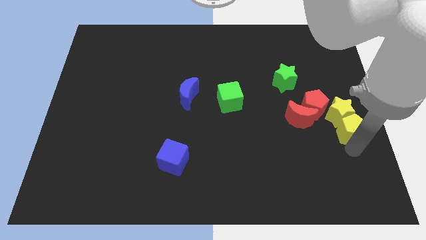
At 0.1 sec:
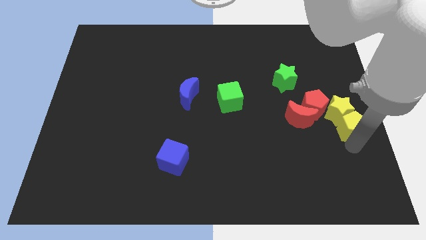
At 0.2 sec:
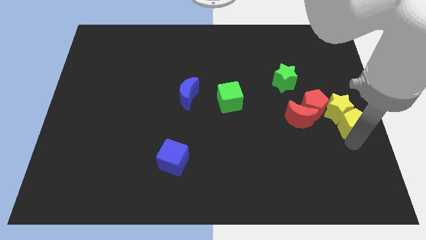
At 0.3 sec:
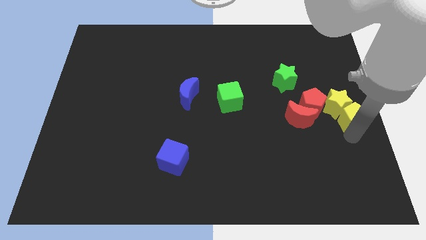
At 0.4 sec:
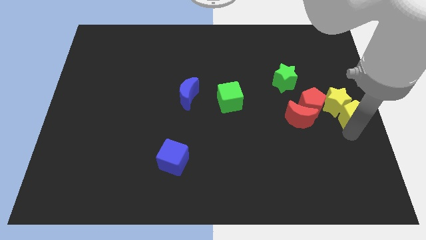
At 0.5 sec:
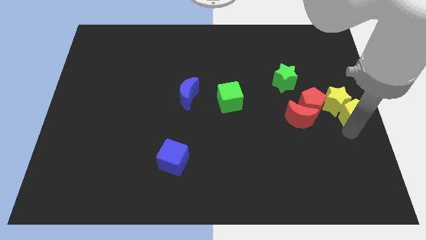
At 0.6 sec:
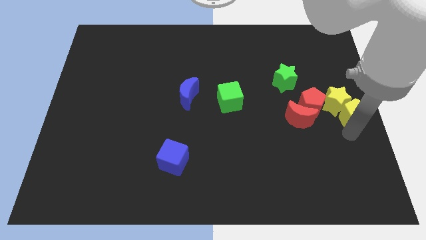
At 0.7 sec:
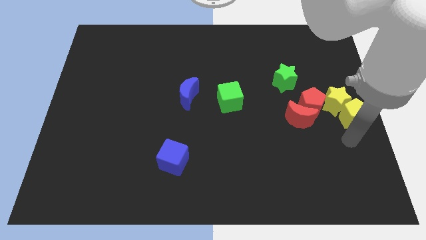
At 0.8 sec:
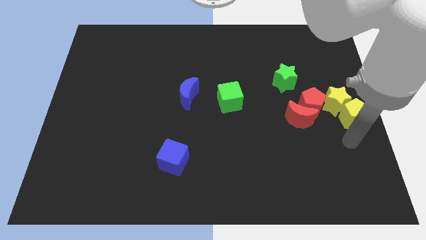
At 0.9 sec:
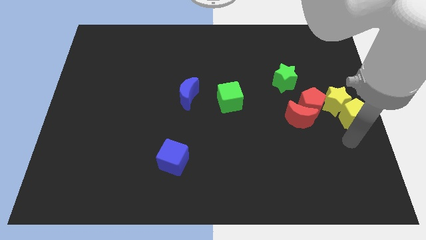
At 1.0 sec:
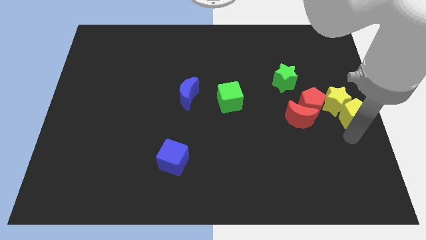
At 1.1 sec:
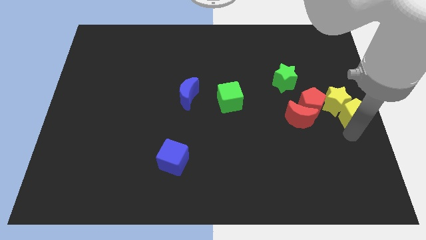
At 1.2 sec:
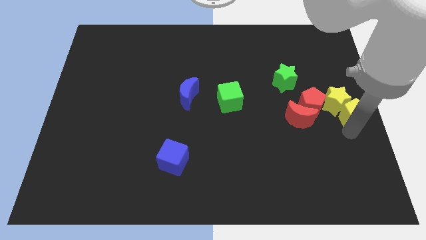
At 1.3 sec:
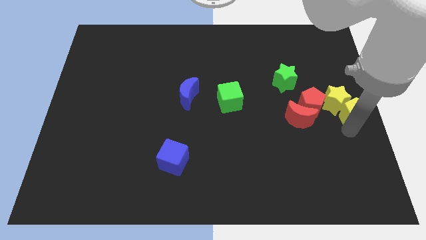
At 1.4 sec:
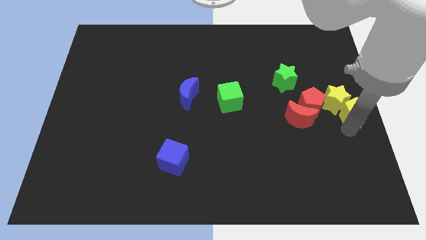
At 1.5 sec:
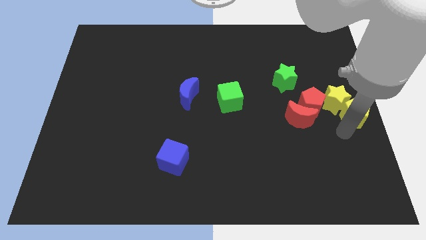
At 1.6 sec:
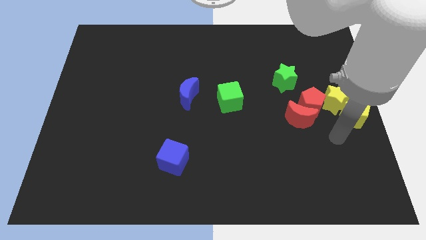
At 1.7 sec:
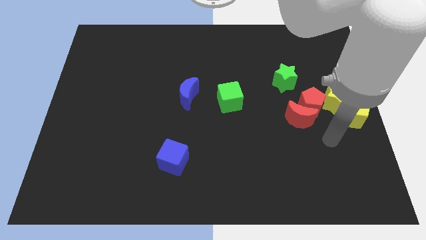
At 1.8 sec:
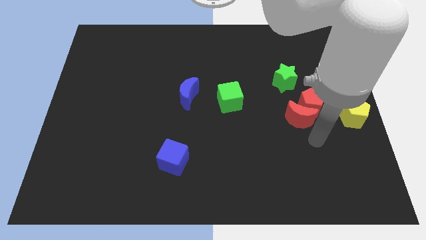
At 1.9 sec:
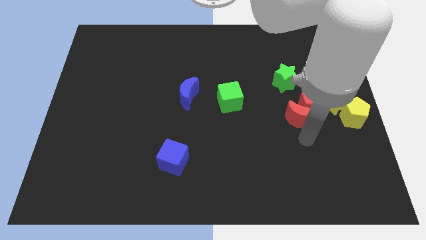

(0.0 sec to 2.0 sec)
make a semicircle of red and the yellow blocks to the right center

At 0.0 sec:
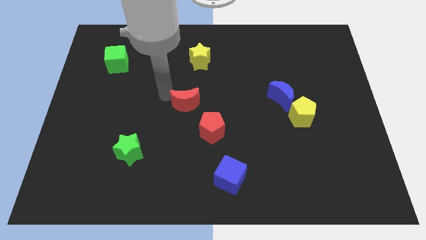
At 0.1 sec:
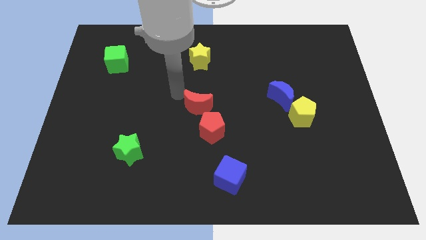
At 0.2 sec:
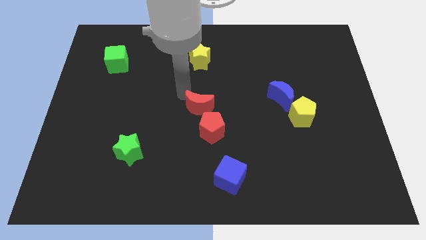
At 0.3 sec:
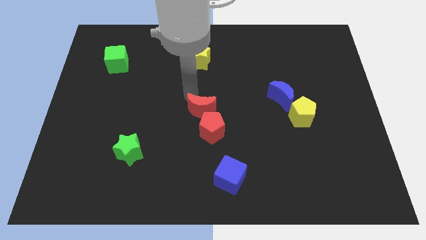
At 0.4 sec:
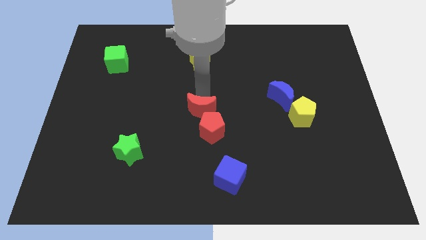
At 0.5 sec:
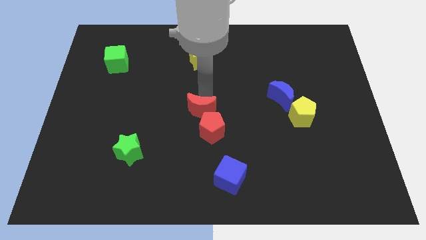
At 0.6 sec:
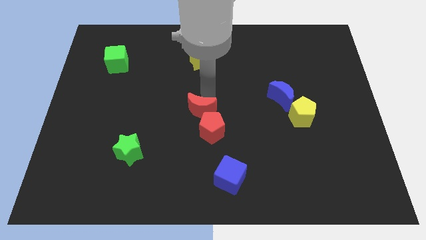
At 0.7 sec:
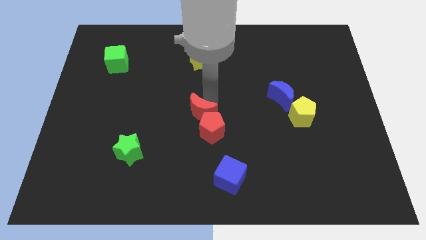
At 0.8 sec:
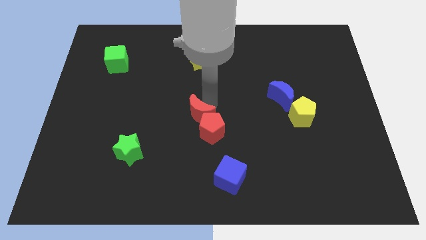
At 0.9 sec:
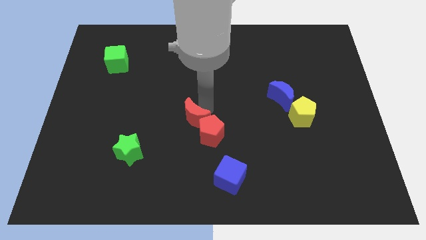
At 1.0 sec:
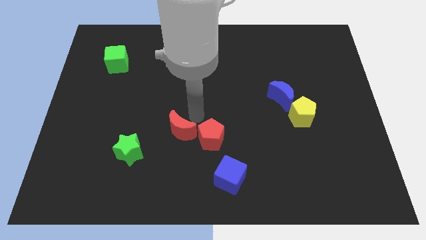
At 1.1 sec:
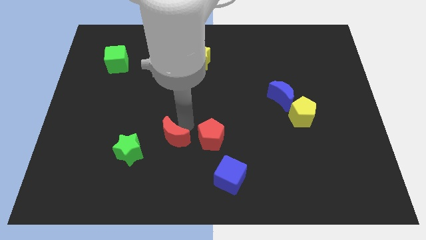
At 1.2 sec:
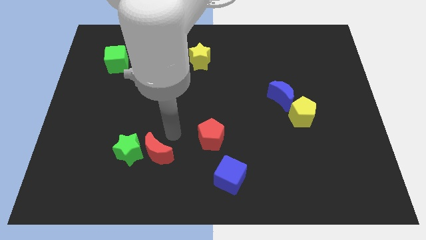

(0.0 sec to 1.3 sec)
place red moon to the left of red pentagon

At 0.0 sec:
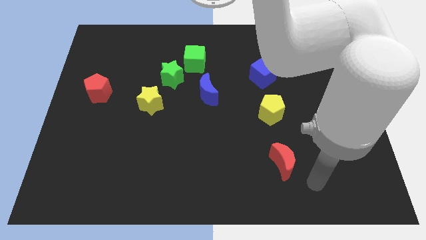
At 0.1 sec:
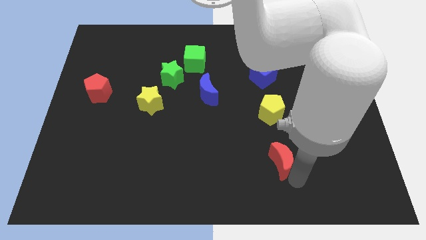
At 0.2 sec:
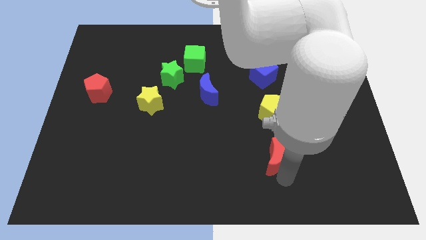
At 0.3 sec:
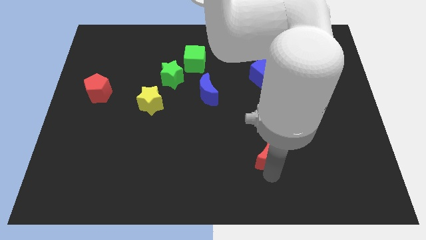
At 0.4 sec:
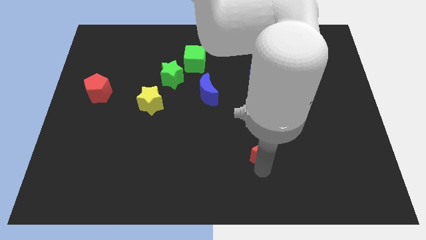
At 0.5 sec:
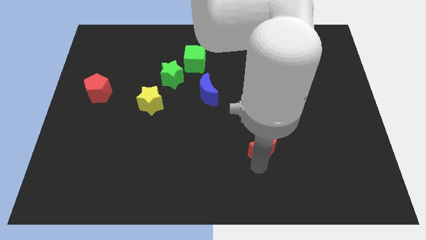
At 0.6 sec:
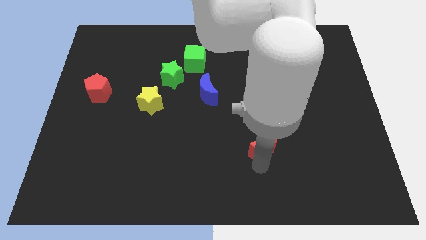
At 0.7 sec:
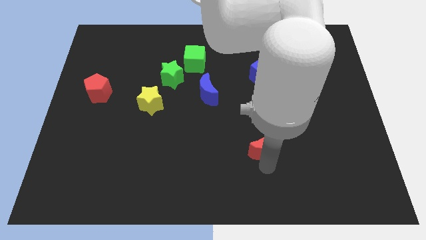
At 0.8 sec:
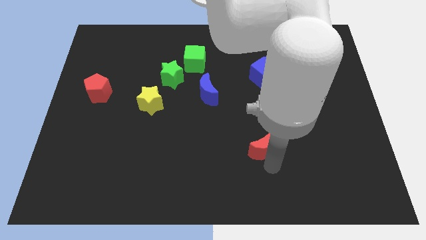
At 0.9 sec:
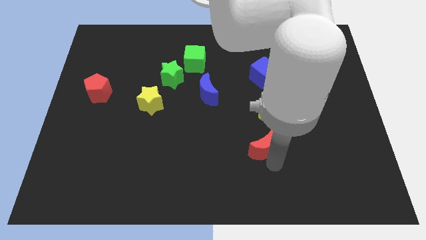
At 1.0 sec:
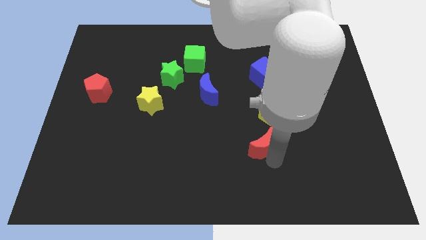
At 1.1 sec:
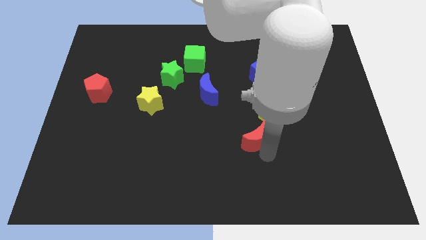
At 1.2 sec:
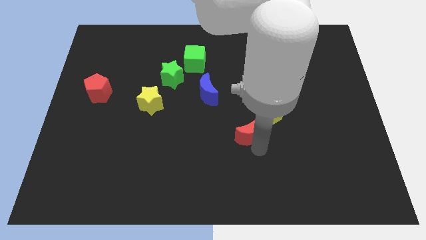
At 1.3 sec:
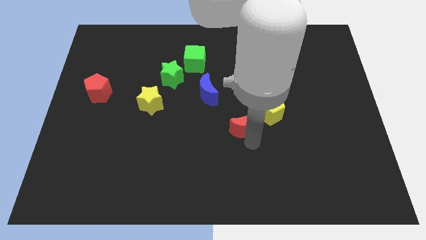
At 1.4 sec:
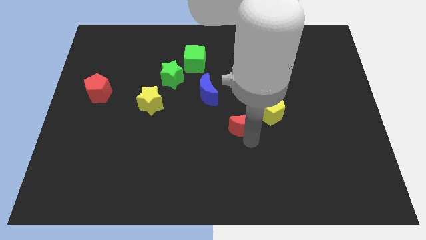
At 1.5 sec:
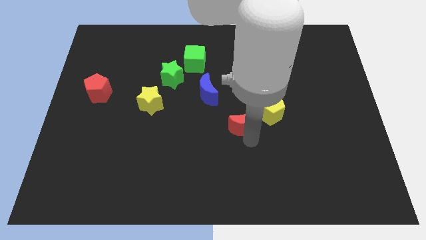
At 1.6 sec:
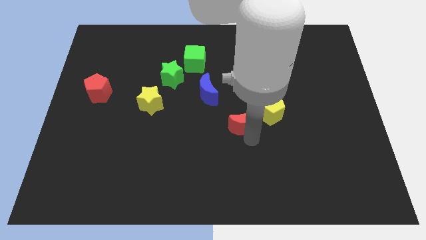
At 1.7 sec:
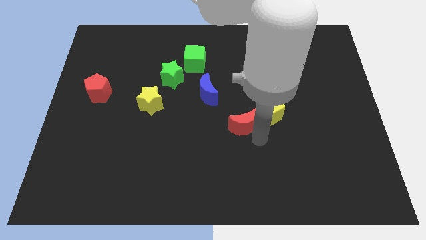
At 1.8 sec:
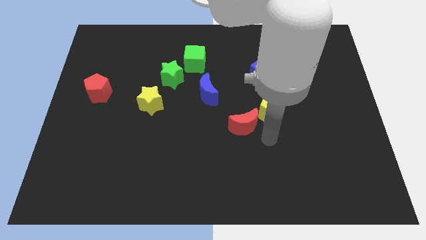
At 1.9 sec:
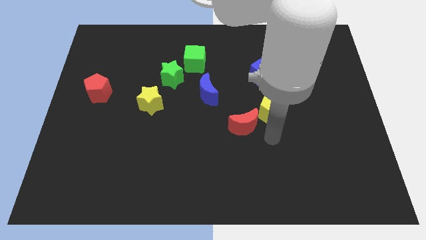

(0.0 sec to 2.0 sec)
place the yellow pentagon near the red moon

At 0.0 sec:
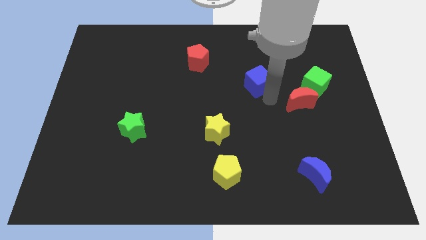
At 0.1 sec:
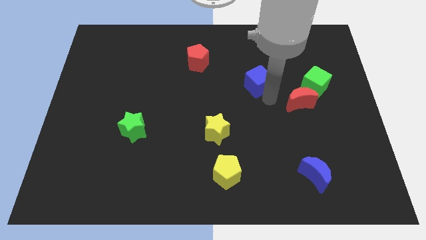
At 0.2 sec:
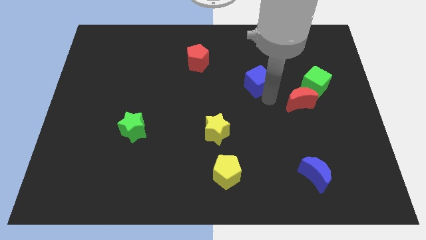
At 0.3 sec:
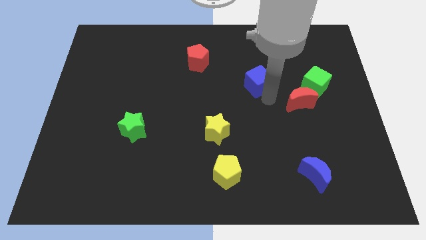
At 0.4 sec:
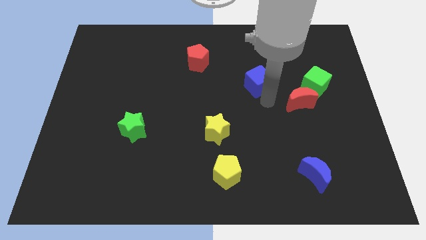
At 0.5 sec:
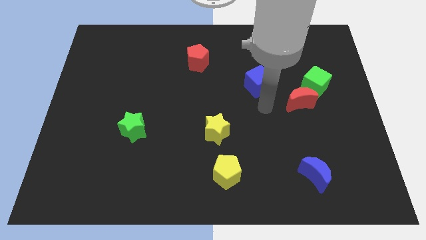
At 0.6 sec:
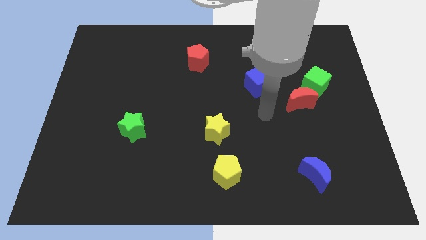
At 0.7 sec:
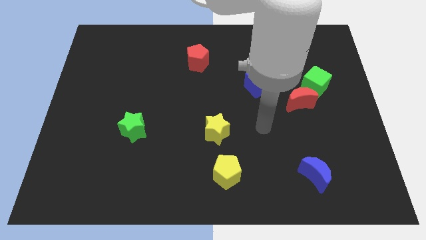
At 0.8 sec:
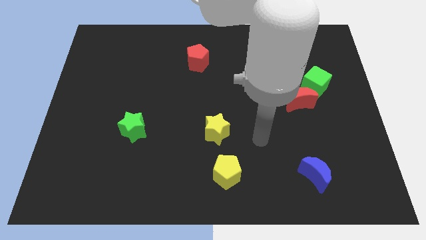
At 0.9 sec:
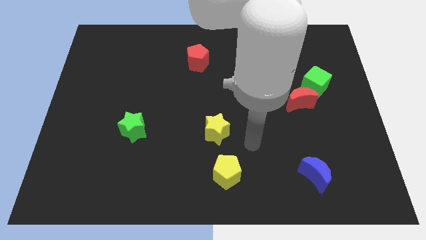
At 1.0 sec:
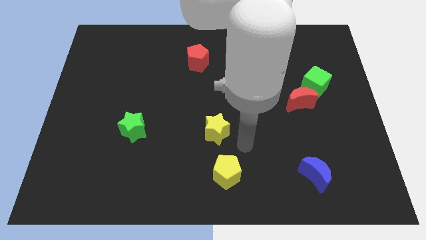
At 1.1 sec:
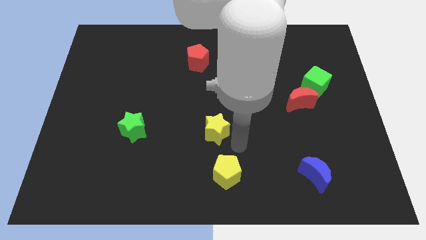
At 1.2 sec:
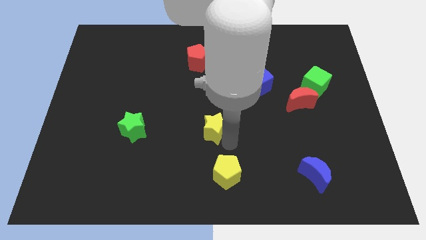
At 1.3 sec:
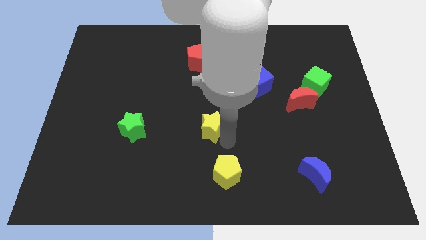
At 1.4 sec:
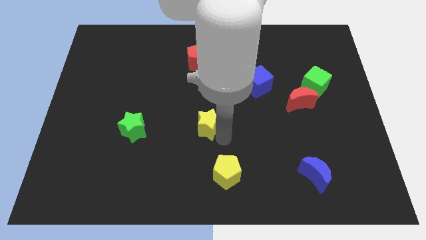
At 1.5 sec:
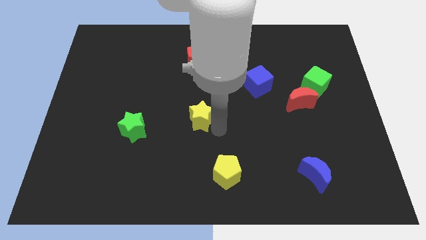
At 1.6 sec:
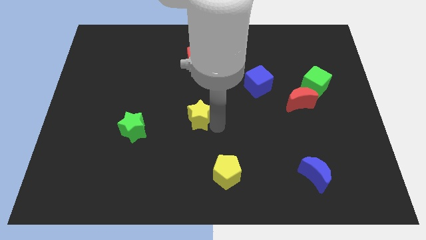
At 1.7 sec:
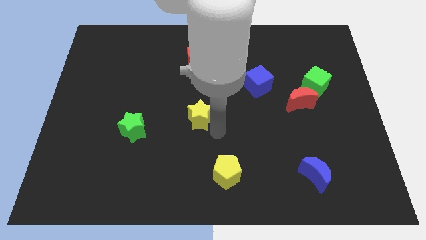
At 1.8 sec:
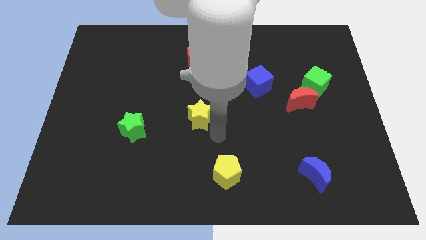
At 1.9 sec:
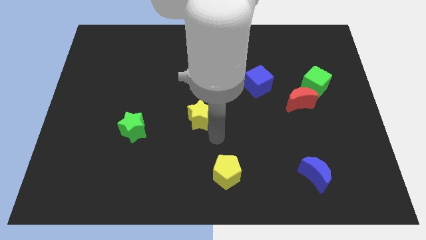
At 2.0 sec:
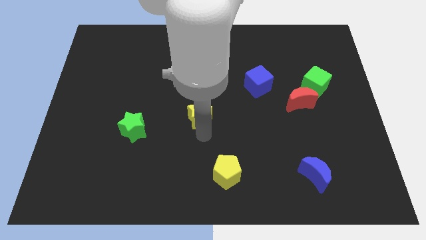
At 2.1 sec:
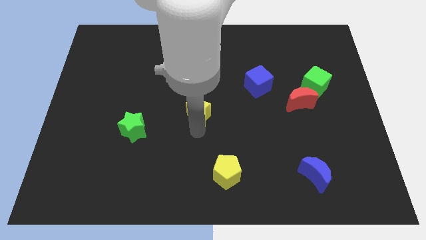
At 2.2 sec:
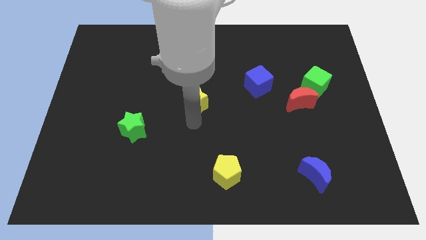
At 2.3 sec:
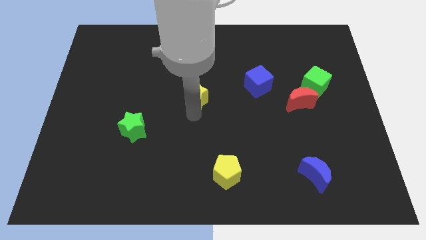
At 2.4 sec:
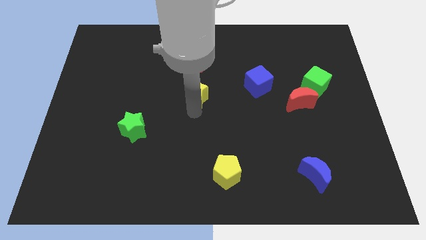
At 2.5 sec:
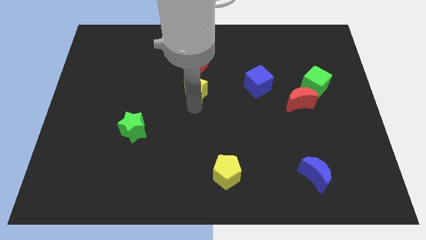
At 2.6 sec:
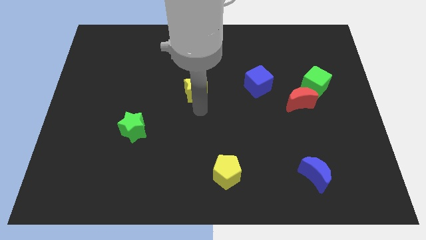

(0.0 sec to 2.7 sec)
place the yellow star below the red pentagon

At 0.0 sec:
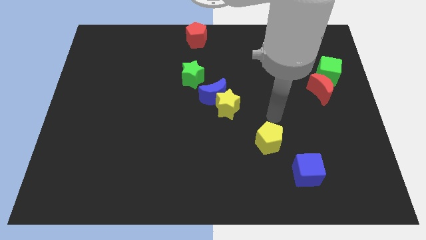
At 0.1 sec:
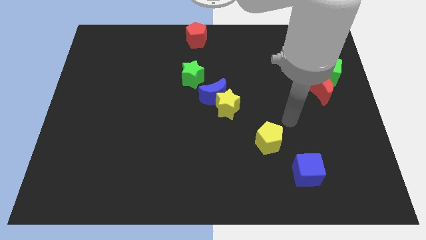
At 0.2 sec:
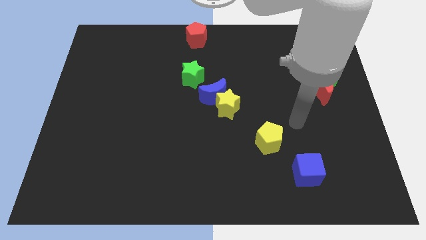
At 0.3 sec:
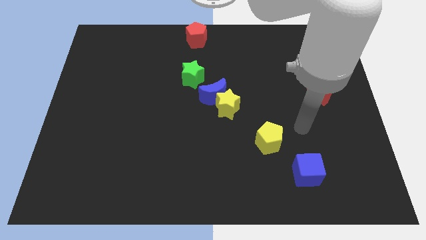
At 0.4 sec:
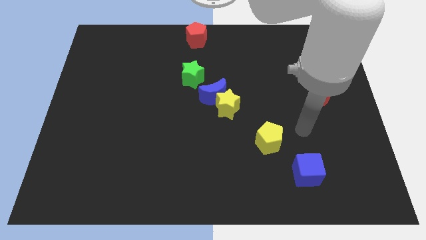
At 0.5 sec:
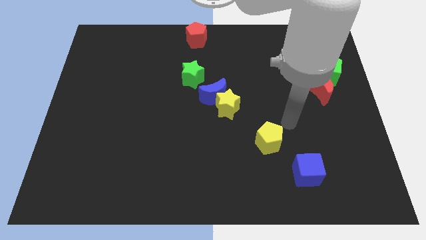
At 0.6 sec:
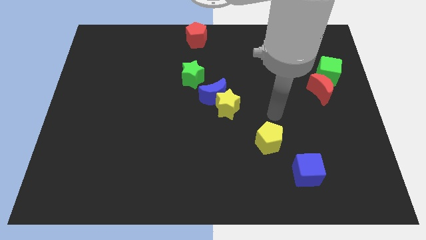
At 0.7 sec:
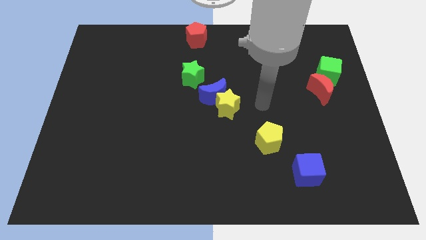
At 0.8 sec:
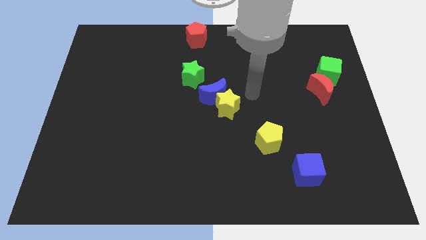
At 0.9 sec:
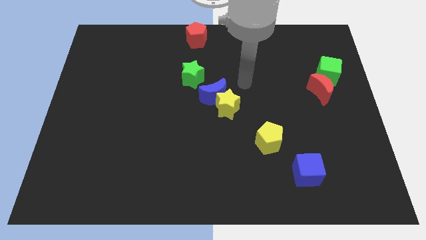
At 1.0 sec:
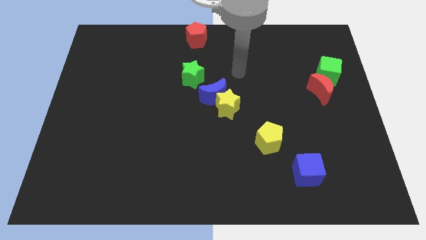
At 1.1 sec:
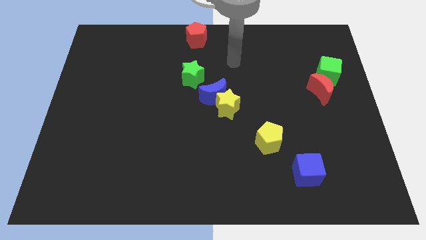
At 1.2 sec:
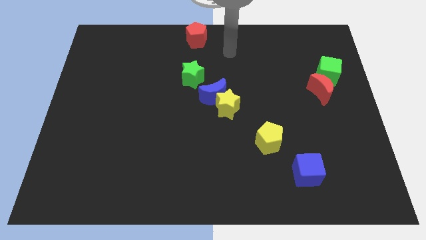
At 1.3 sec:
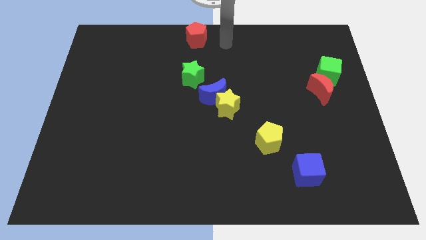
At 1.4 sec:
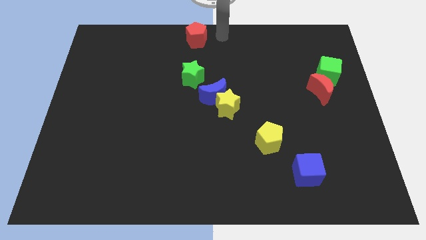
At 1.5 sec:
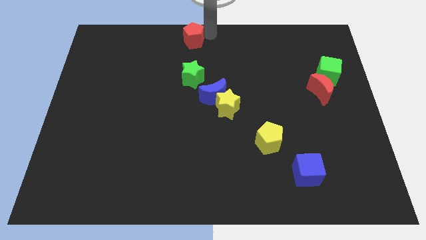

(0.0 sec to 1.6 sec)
move your arm towards the red pentagon
